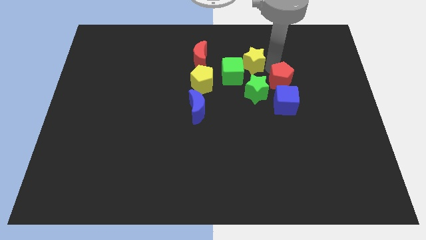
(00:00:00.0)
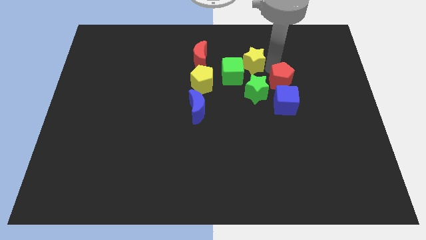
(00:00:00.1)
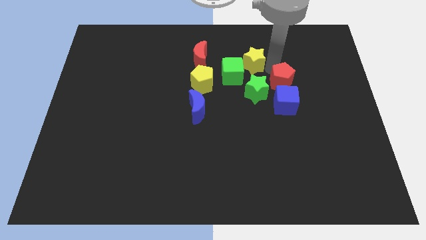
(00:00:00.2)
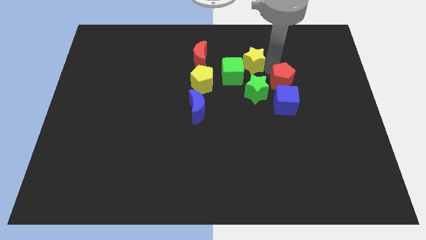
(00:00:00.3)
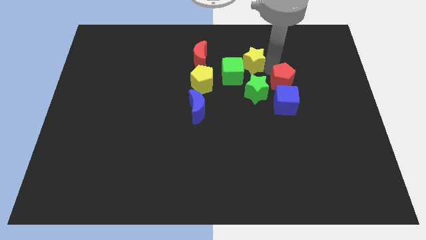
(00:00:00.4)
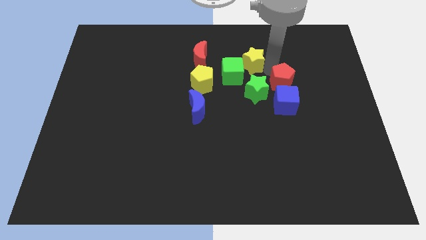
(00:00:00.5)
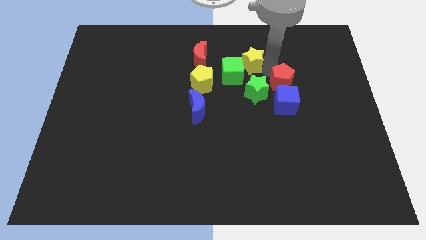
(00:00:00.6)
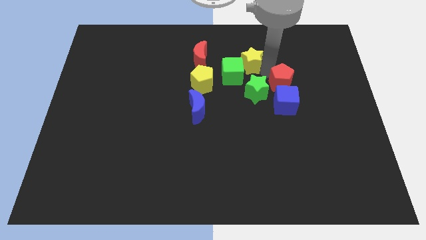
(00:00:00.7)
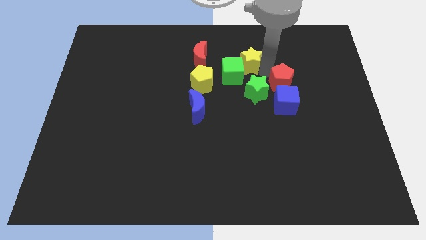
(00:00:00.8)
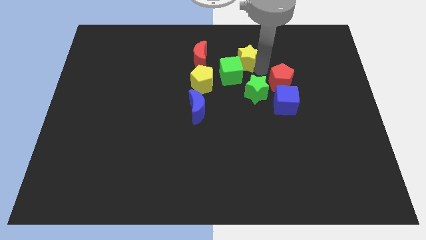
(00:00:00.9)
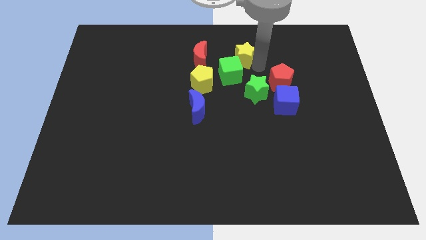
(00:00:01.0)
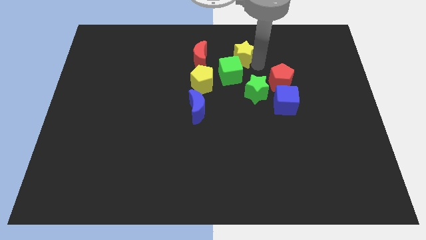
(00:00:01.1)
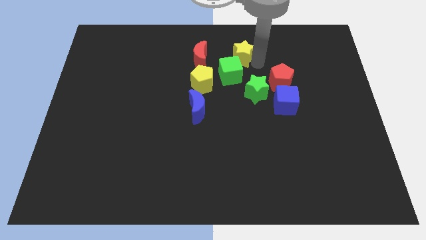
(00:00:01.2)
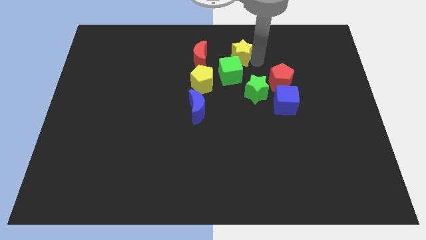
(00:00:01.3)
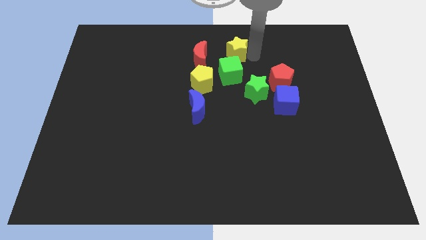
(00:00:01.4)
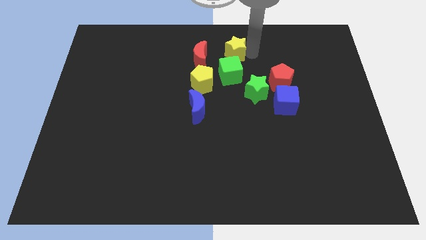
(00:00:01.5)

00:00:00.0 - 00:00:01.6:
push yellow star to the top of green block

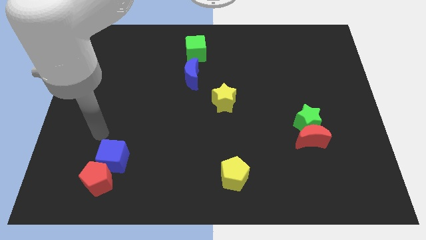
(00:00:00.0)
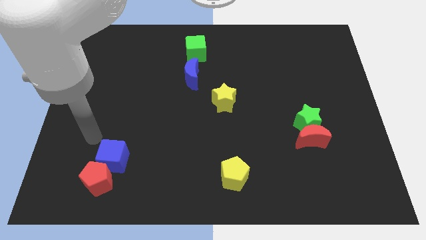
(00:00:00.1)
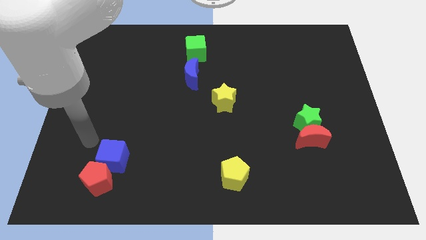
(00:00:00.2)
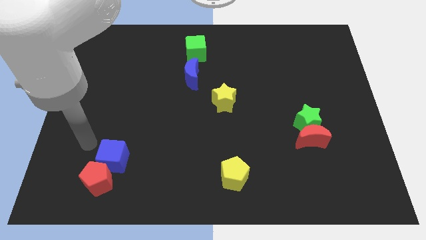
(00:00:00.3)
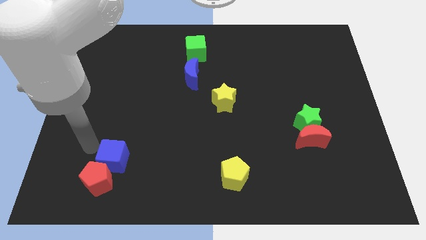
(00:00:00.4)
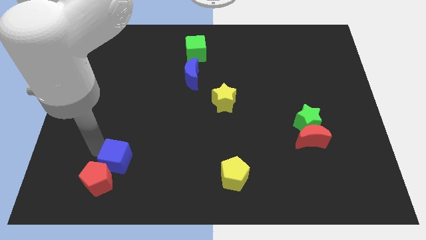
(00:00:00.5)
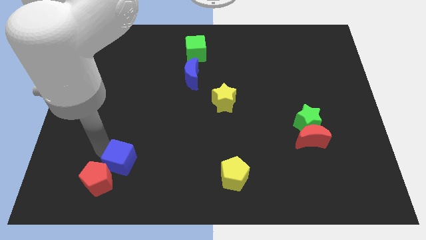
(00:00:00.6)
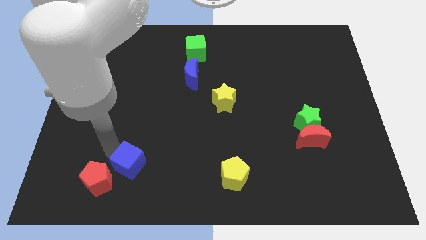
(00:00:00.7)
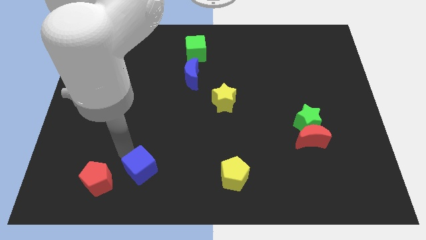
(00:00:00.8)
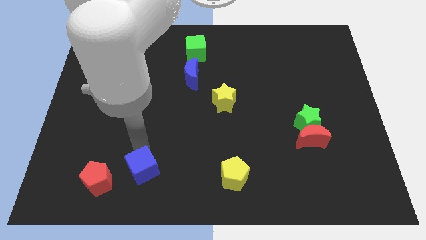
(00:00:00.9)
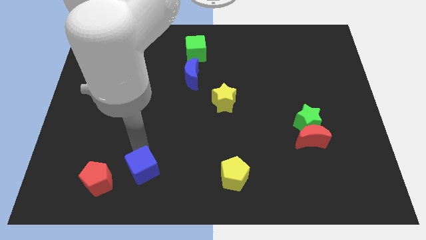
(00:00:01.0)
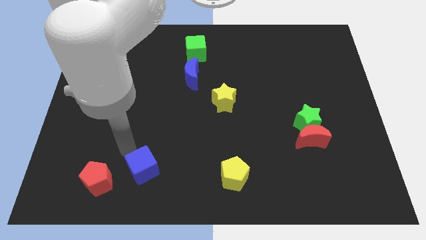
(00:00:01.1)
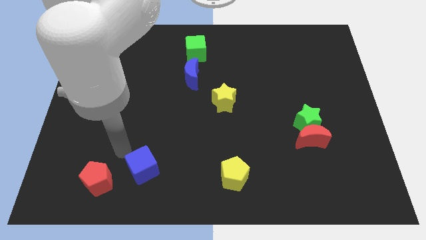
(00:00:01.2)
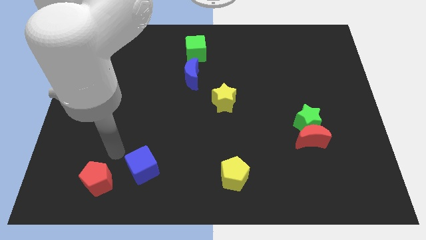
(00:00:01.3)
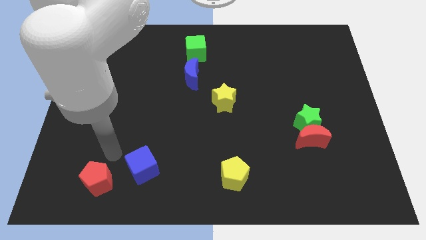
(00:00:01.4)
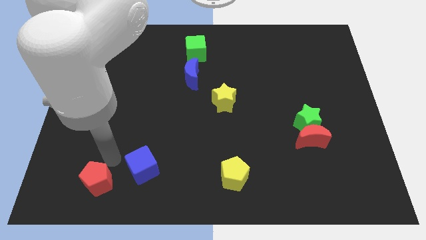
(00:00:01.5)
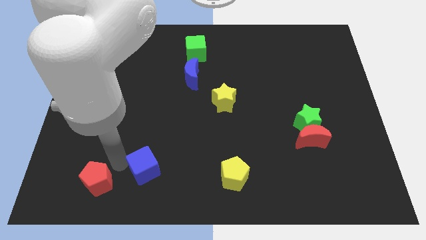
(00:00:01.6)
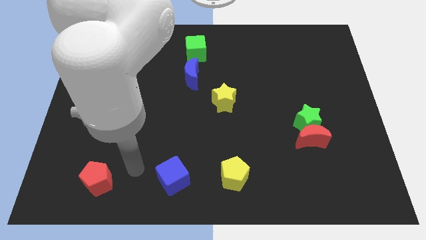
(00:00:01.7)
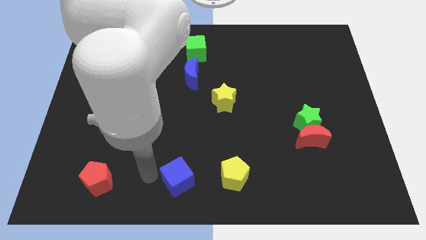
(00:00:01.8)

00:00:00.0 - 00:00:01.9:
push the blue cube to the right of the red pentagon

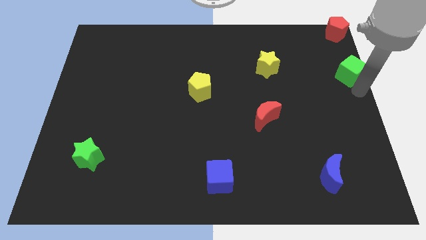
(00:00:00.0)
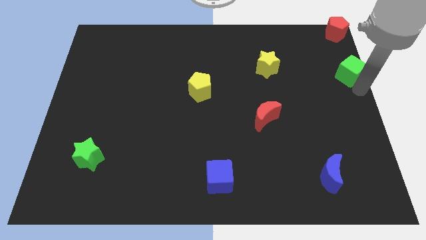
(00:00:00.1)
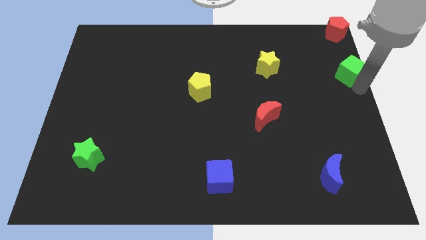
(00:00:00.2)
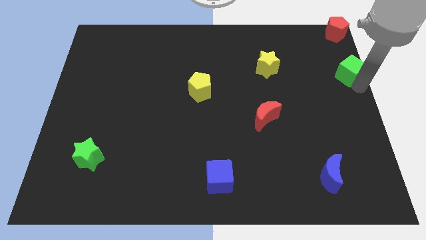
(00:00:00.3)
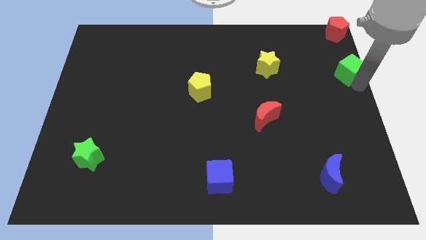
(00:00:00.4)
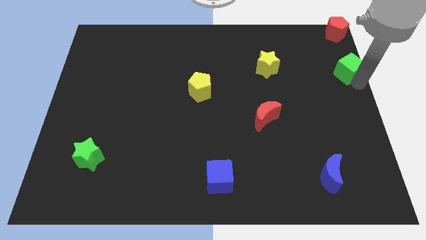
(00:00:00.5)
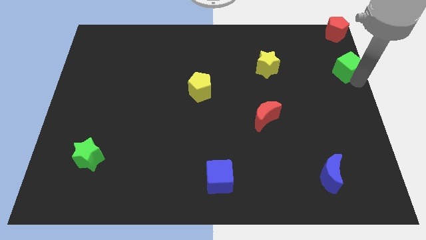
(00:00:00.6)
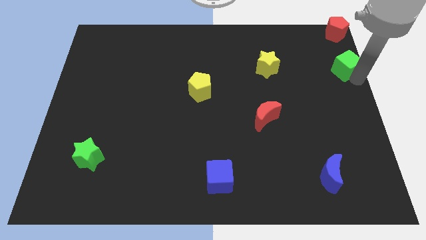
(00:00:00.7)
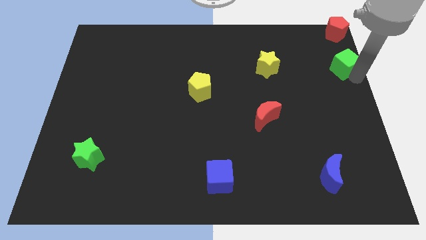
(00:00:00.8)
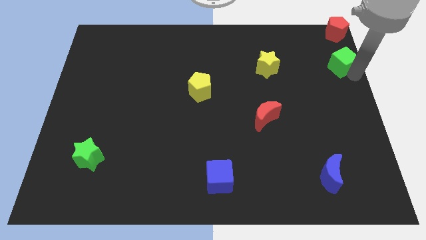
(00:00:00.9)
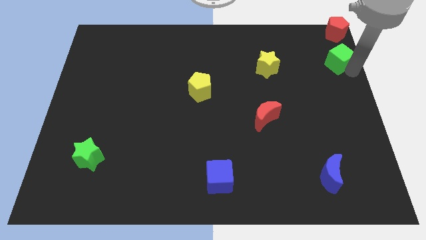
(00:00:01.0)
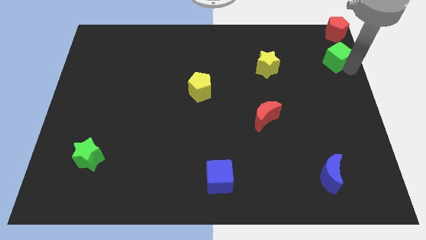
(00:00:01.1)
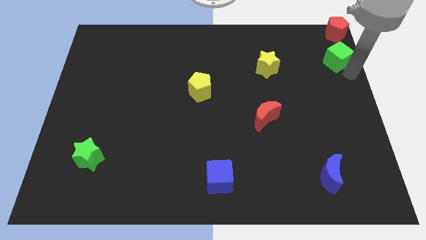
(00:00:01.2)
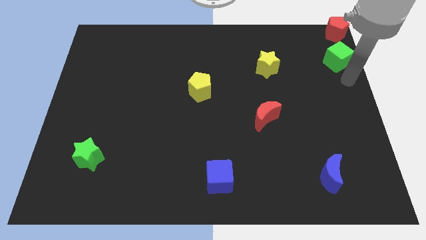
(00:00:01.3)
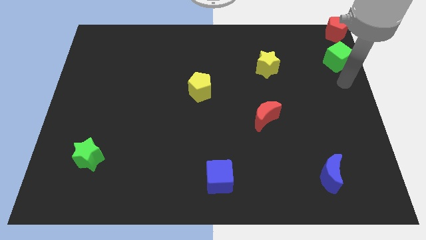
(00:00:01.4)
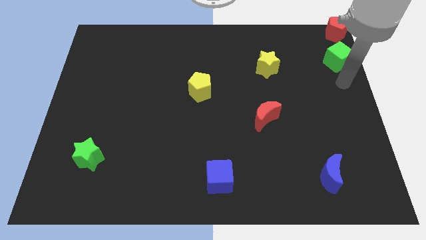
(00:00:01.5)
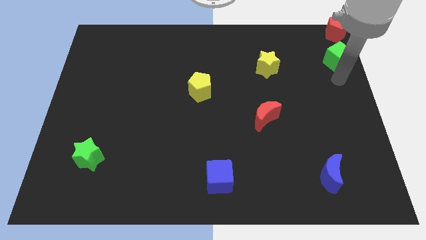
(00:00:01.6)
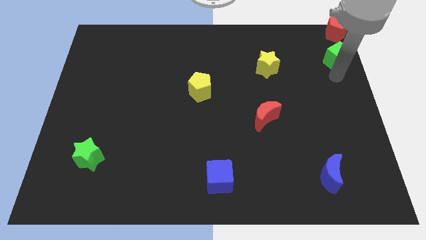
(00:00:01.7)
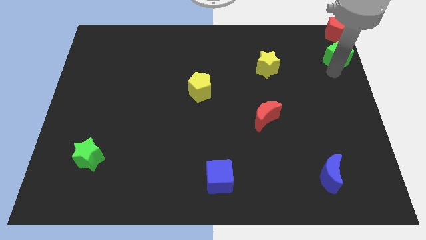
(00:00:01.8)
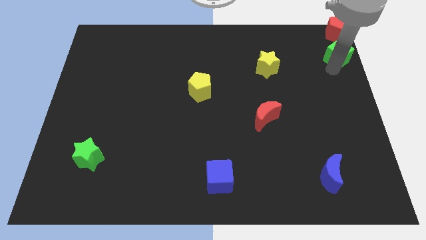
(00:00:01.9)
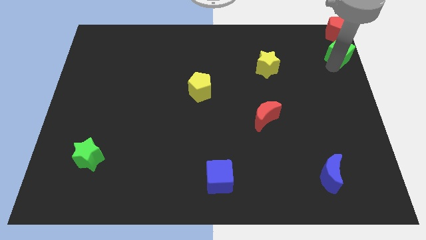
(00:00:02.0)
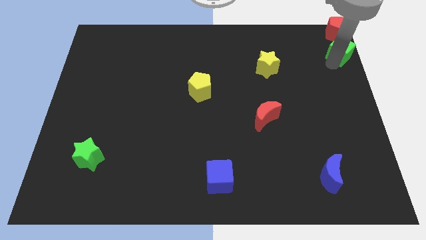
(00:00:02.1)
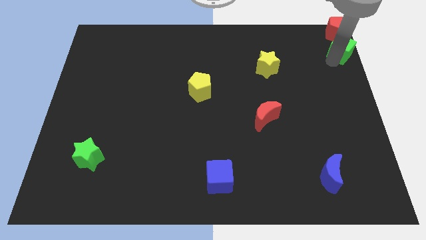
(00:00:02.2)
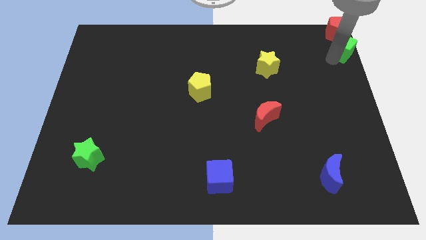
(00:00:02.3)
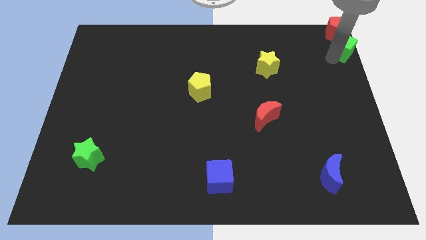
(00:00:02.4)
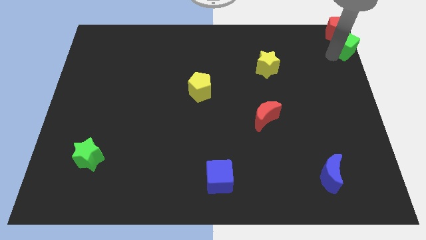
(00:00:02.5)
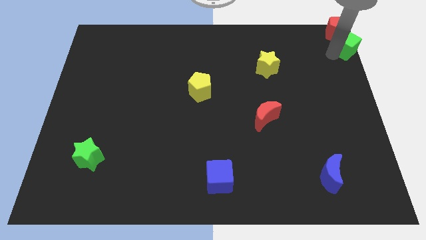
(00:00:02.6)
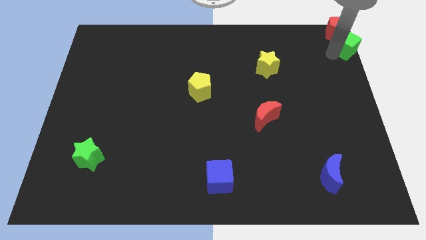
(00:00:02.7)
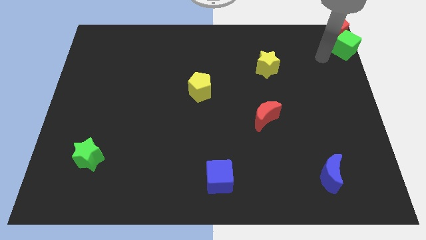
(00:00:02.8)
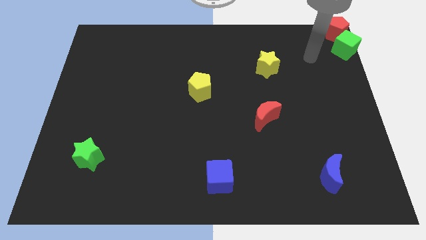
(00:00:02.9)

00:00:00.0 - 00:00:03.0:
push green cube towards up

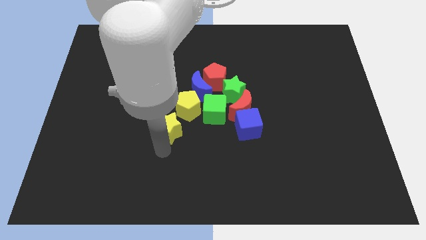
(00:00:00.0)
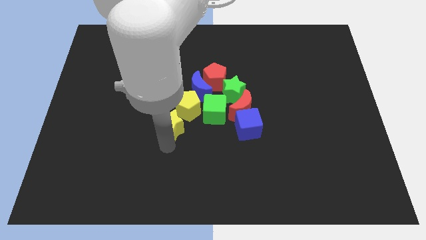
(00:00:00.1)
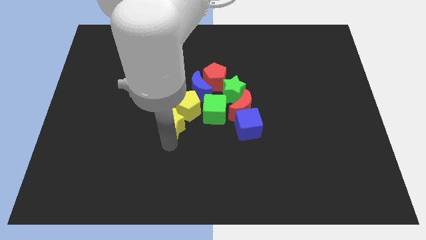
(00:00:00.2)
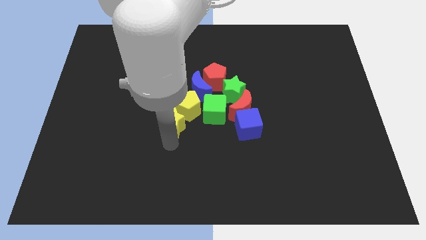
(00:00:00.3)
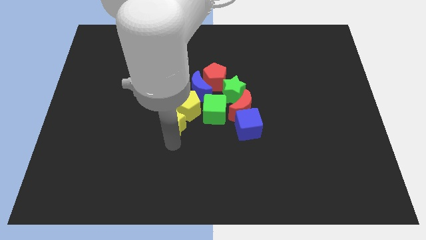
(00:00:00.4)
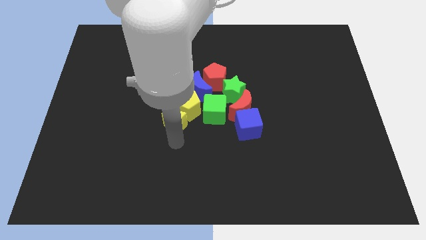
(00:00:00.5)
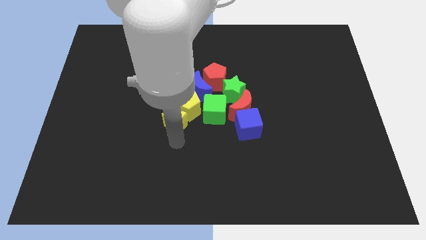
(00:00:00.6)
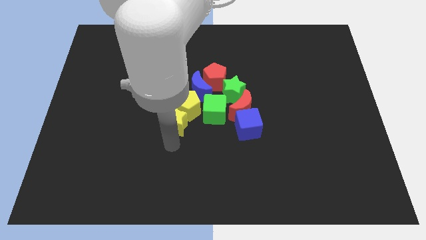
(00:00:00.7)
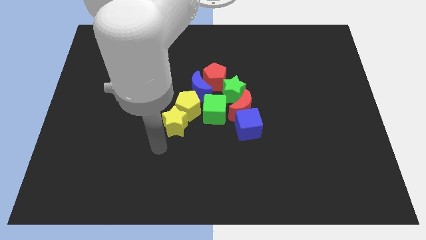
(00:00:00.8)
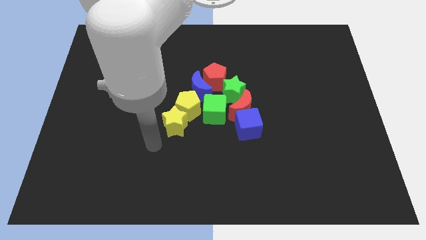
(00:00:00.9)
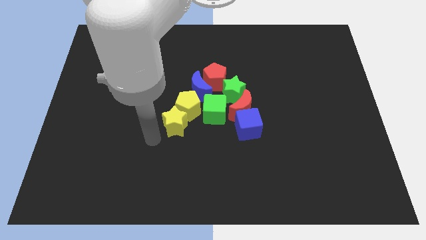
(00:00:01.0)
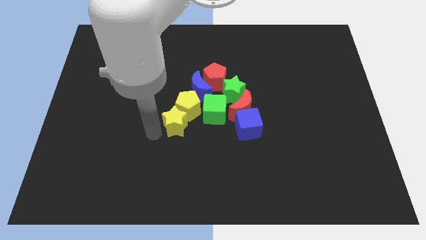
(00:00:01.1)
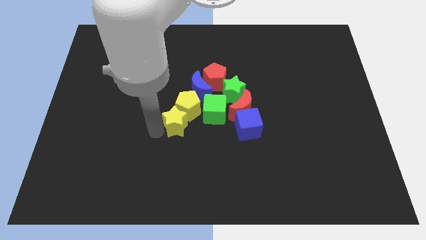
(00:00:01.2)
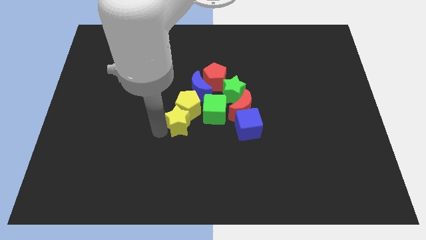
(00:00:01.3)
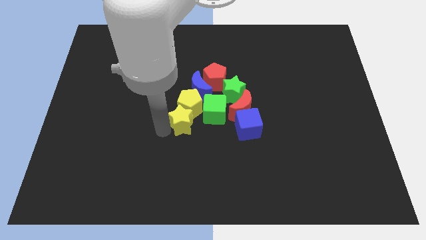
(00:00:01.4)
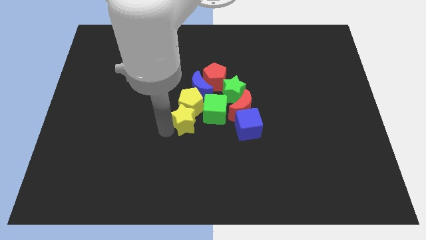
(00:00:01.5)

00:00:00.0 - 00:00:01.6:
push the yellow star into the yellow pentagon

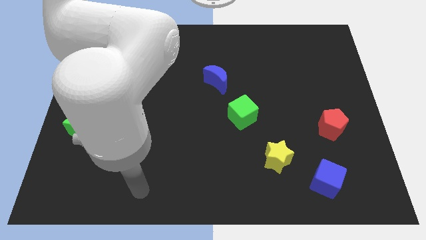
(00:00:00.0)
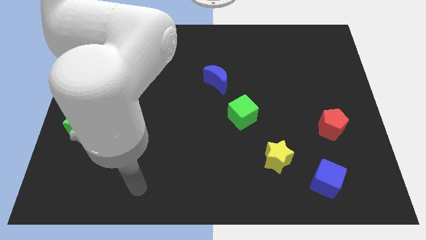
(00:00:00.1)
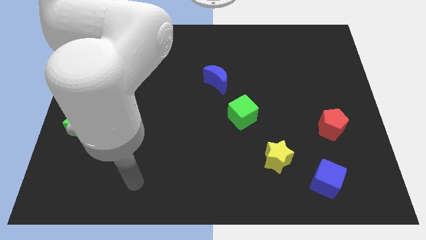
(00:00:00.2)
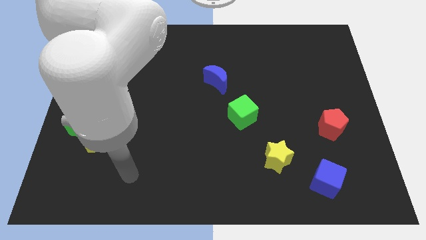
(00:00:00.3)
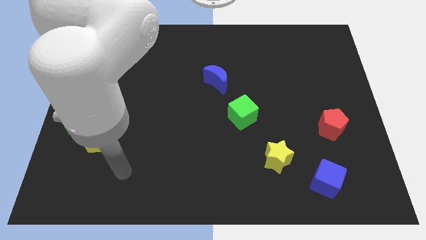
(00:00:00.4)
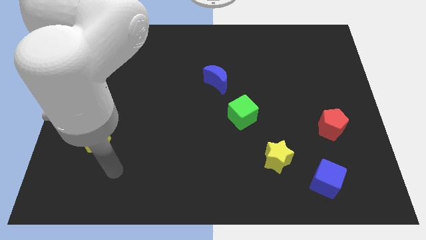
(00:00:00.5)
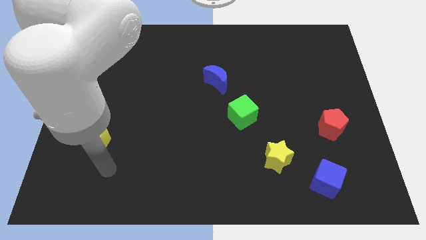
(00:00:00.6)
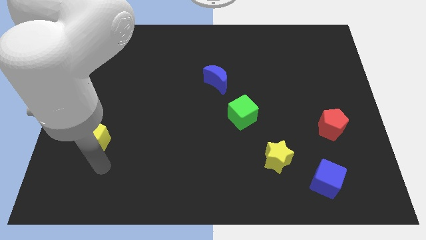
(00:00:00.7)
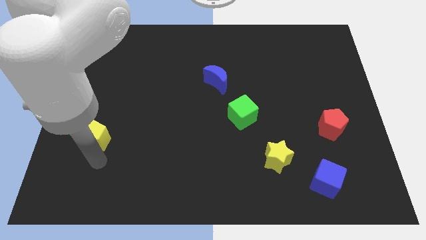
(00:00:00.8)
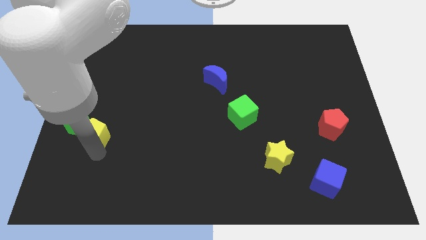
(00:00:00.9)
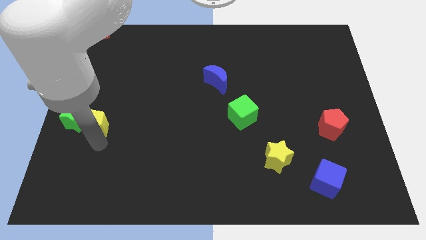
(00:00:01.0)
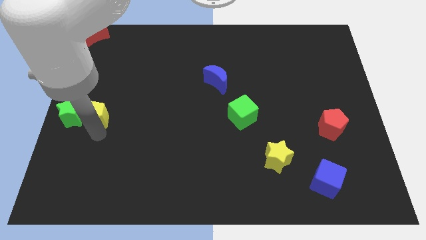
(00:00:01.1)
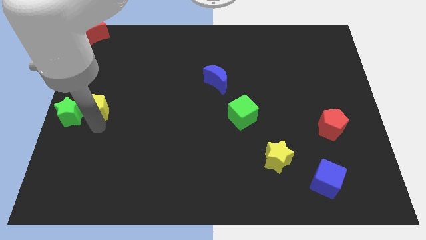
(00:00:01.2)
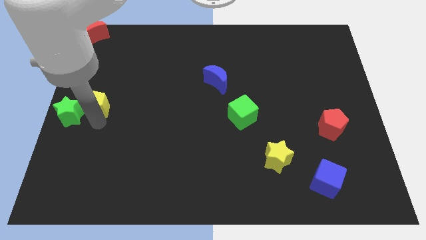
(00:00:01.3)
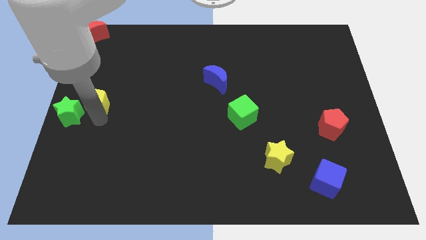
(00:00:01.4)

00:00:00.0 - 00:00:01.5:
push the yellow pentagon to the right of the green star
